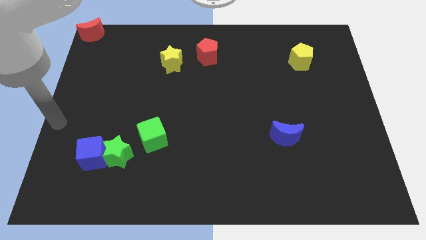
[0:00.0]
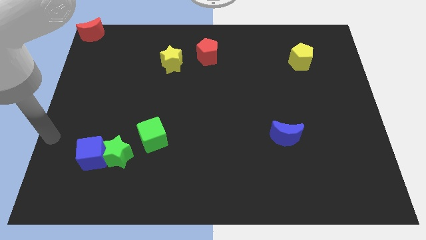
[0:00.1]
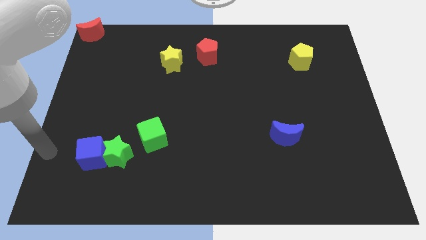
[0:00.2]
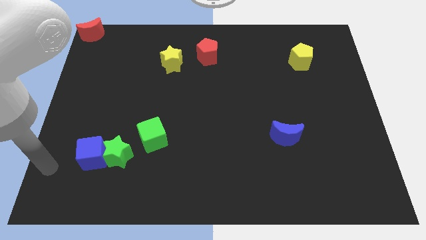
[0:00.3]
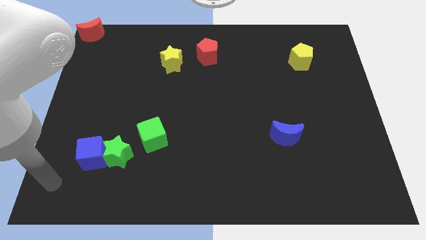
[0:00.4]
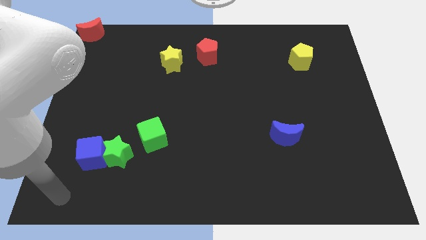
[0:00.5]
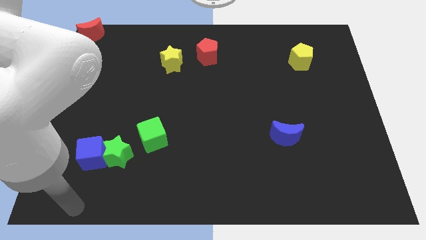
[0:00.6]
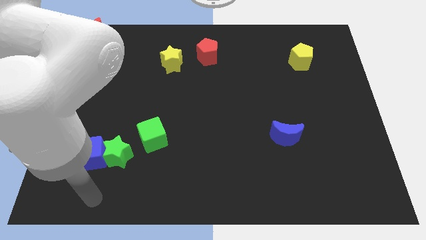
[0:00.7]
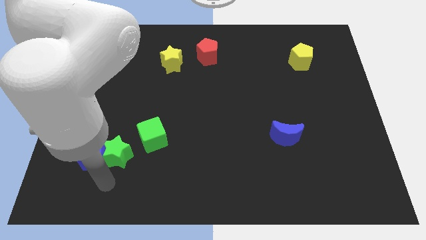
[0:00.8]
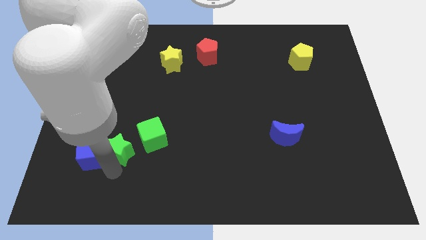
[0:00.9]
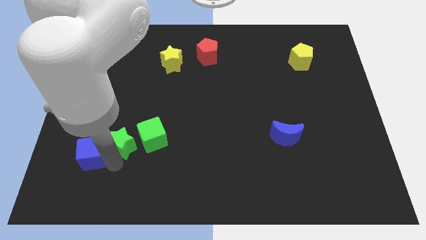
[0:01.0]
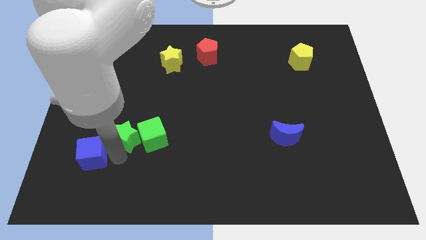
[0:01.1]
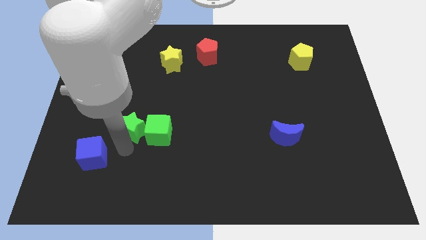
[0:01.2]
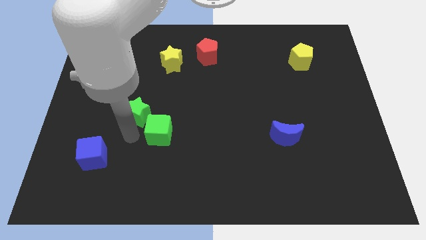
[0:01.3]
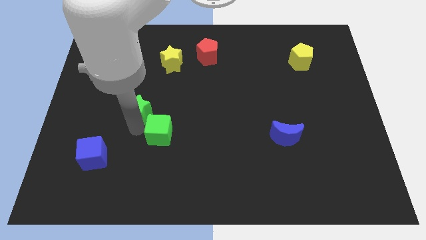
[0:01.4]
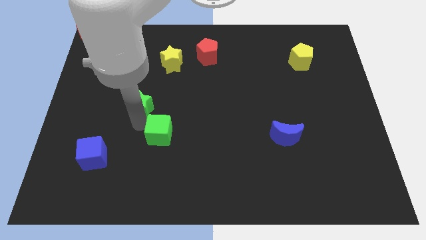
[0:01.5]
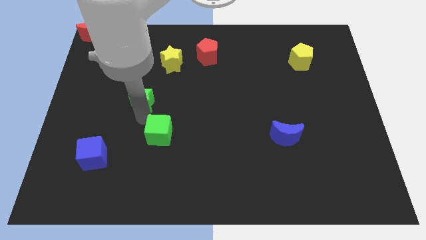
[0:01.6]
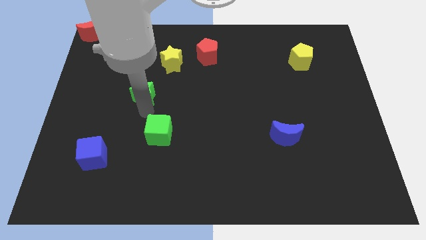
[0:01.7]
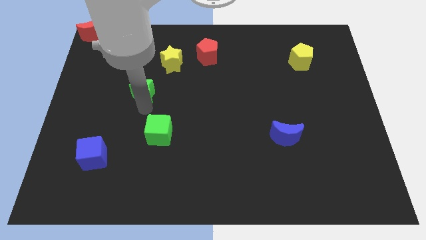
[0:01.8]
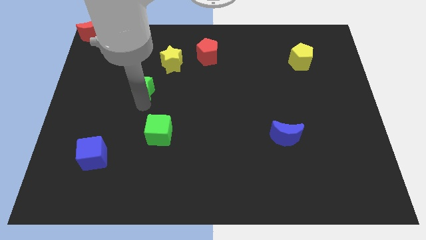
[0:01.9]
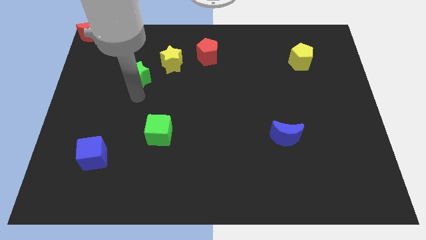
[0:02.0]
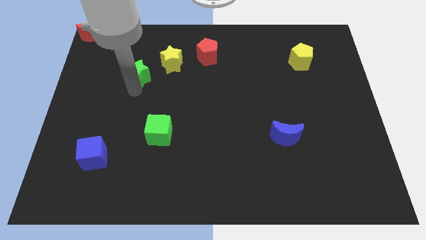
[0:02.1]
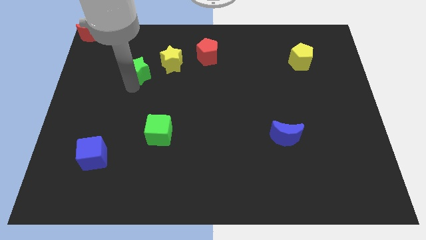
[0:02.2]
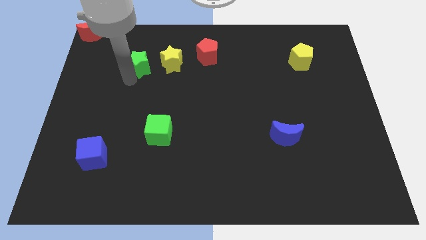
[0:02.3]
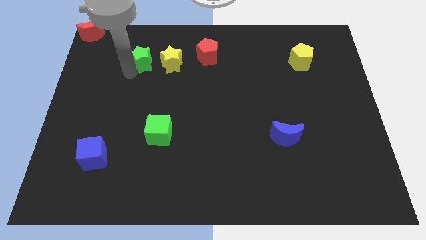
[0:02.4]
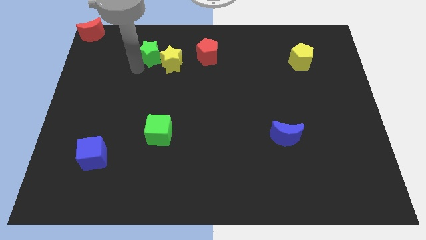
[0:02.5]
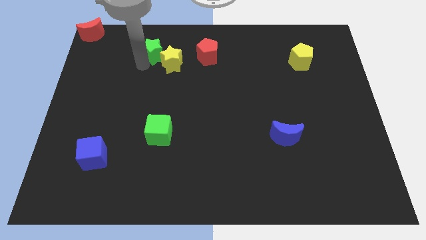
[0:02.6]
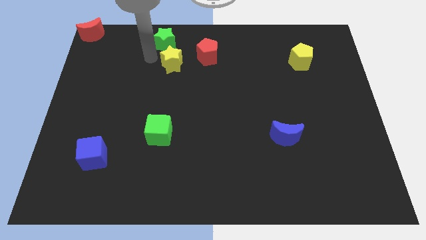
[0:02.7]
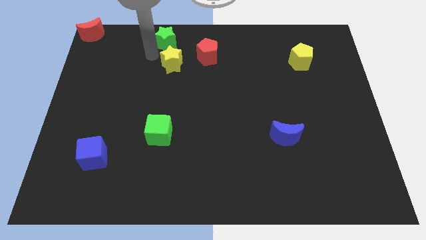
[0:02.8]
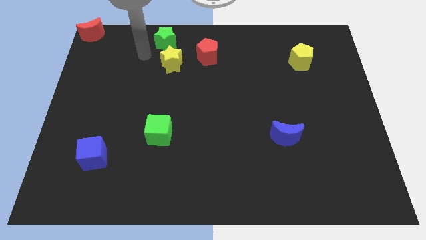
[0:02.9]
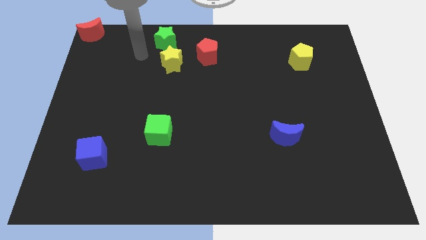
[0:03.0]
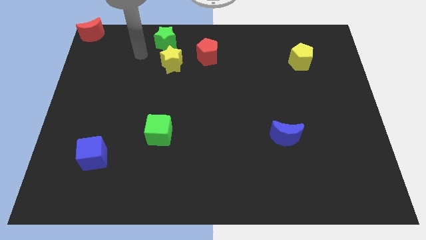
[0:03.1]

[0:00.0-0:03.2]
move the green star towards the top center of the board

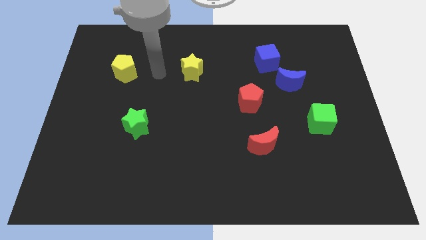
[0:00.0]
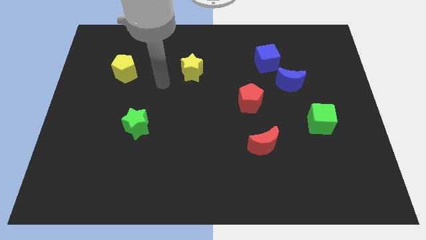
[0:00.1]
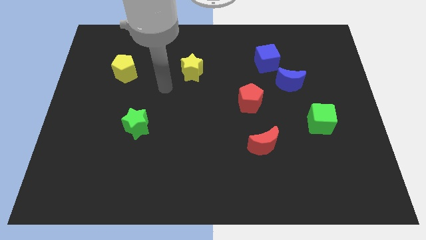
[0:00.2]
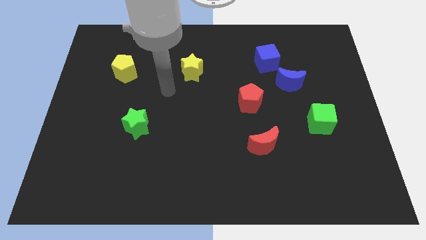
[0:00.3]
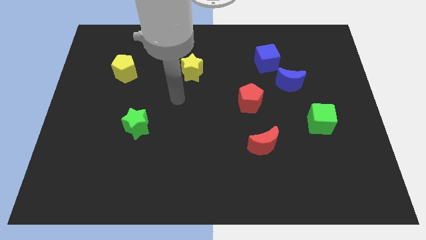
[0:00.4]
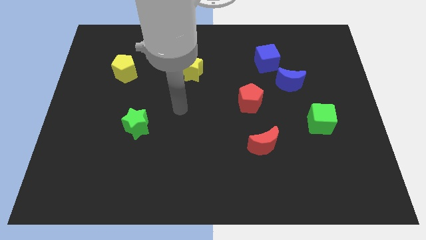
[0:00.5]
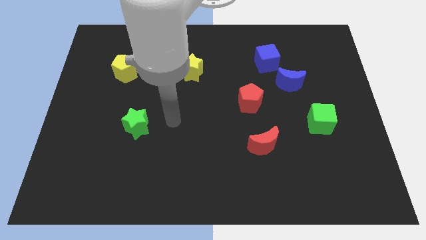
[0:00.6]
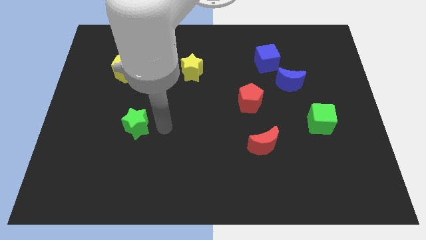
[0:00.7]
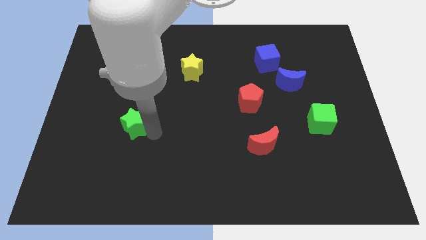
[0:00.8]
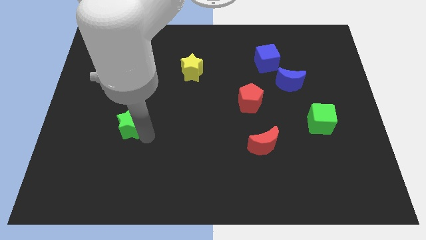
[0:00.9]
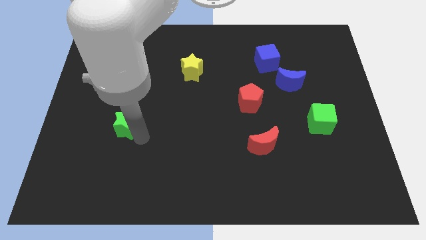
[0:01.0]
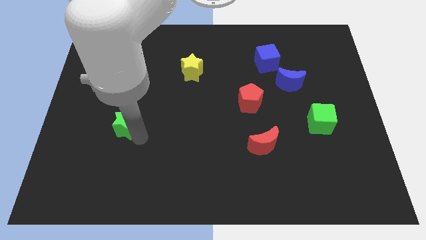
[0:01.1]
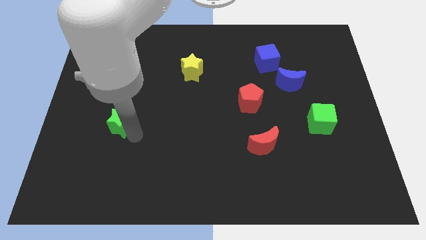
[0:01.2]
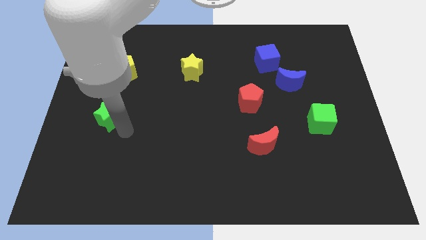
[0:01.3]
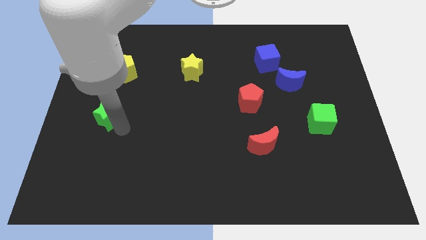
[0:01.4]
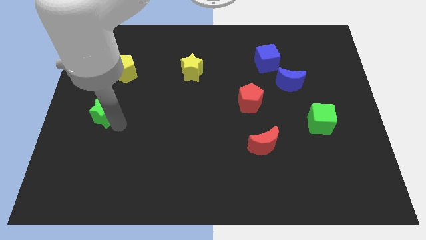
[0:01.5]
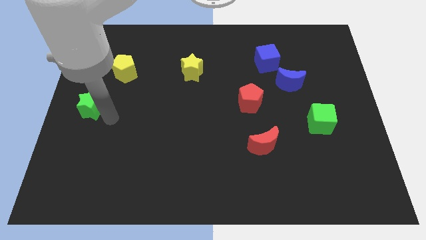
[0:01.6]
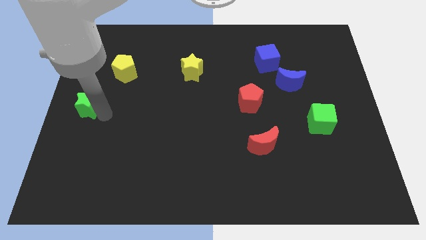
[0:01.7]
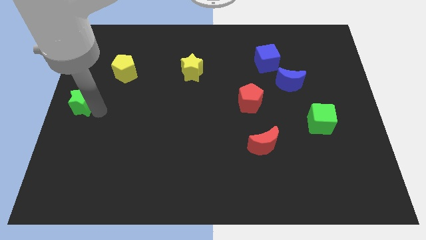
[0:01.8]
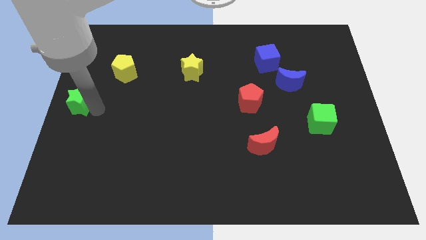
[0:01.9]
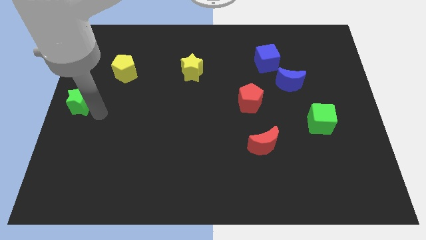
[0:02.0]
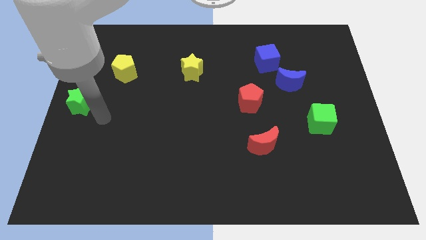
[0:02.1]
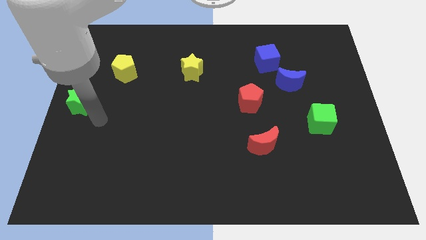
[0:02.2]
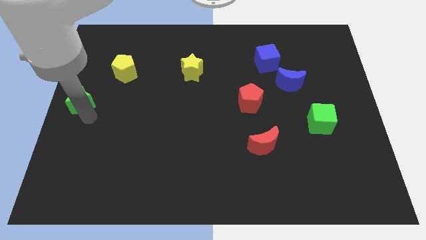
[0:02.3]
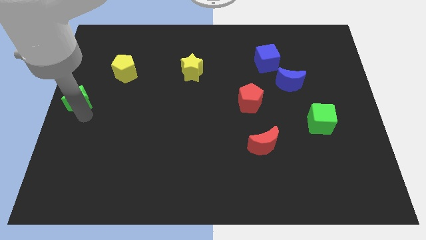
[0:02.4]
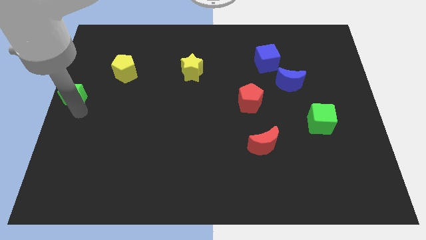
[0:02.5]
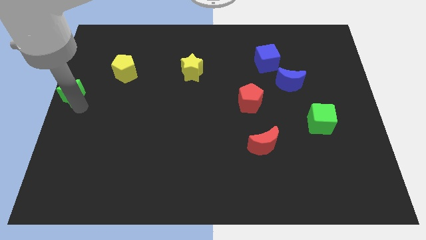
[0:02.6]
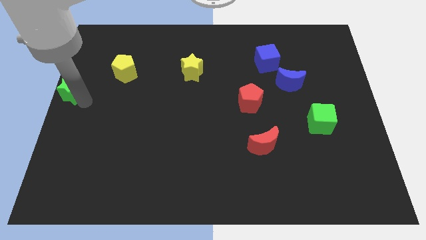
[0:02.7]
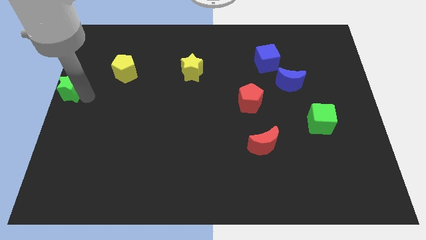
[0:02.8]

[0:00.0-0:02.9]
move the green star to left of the board

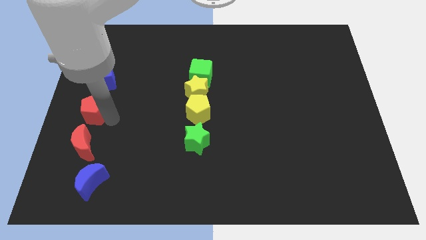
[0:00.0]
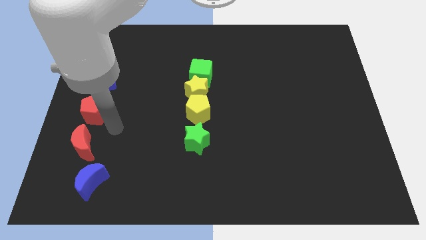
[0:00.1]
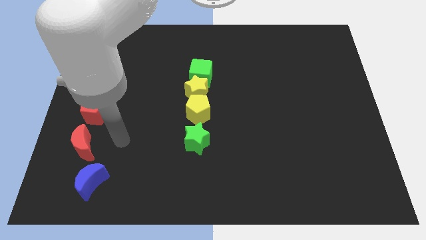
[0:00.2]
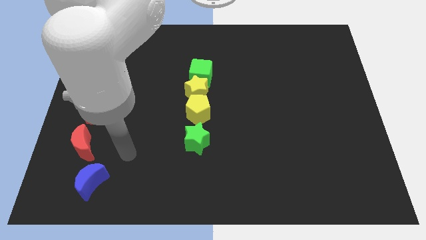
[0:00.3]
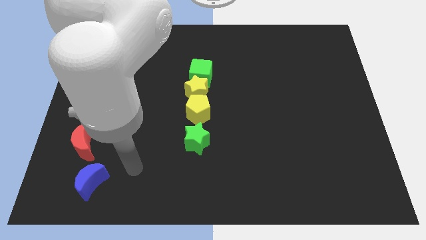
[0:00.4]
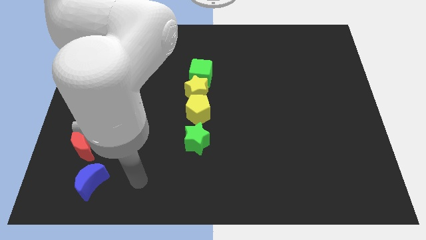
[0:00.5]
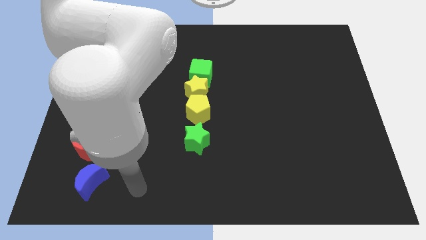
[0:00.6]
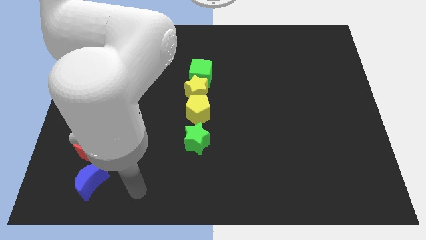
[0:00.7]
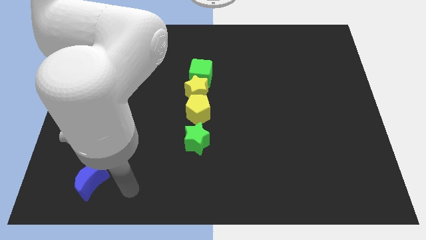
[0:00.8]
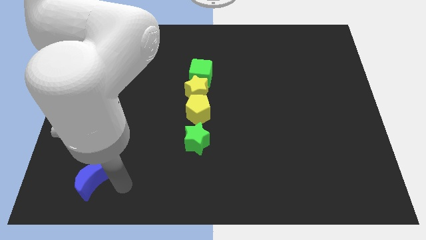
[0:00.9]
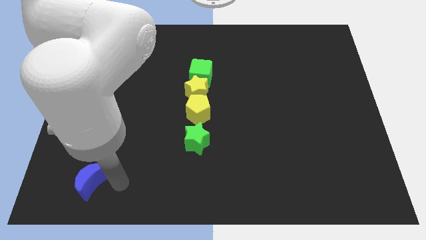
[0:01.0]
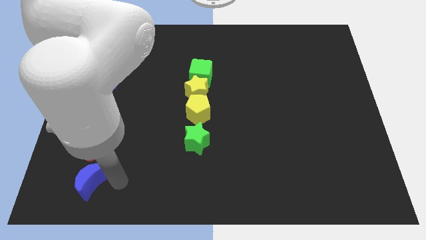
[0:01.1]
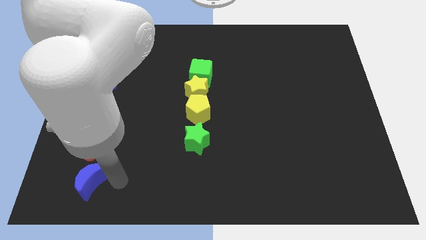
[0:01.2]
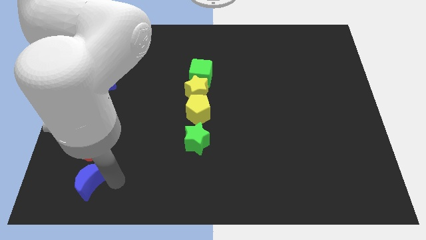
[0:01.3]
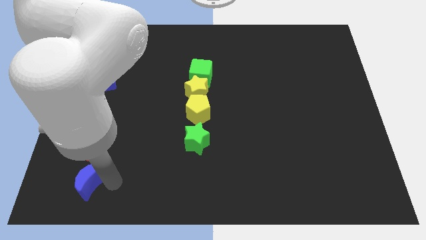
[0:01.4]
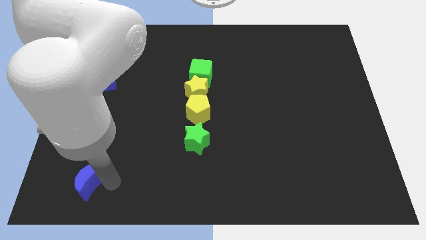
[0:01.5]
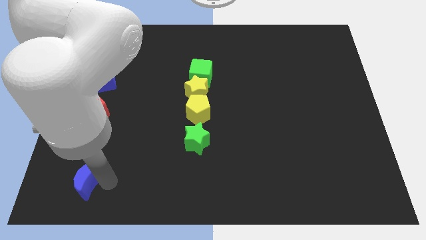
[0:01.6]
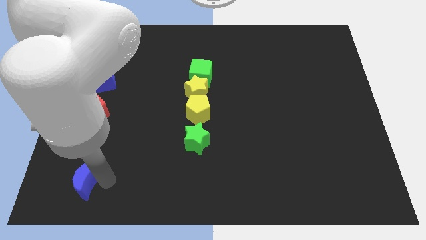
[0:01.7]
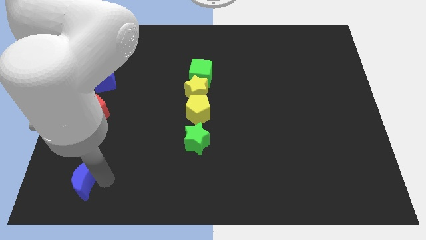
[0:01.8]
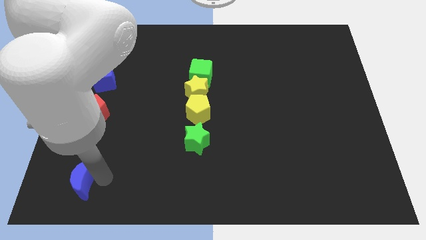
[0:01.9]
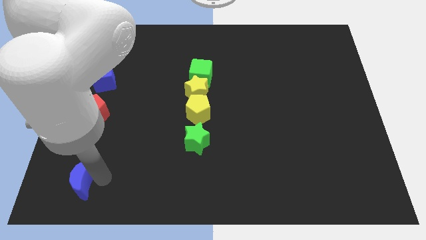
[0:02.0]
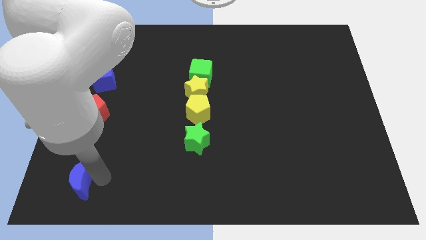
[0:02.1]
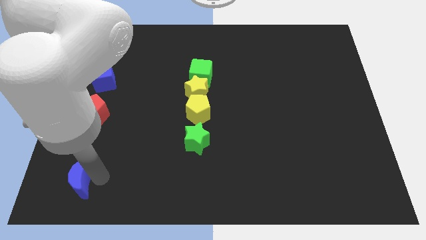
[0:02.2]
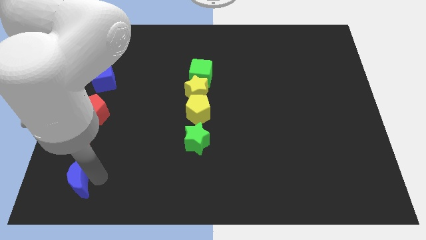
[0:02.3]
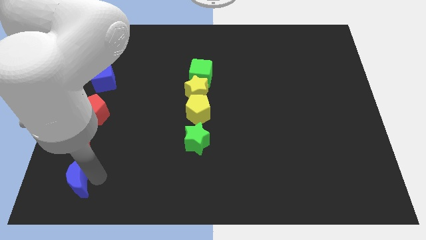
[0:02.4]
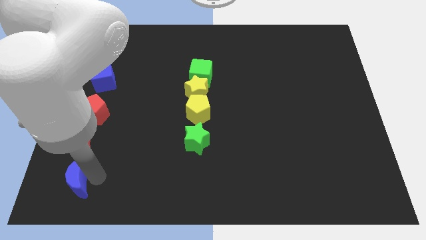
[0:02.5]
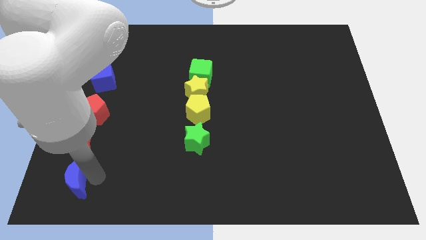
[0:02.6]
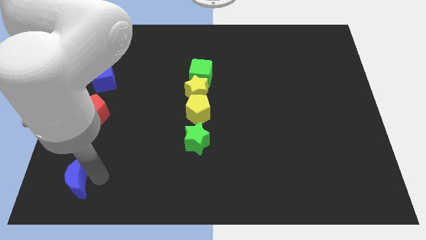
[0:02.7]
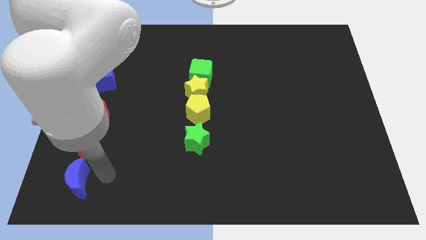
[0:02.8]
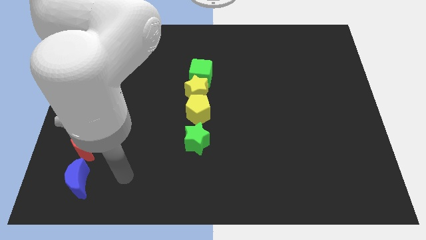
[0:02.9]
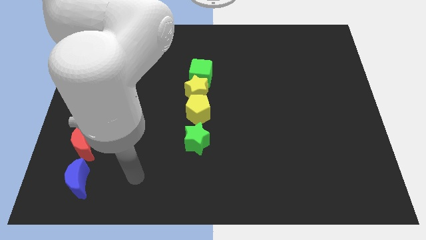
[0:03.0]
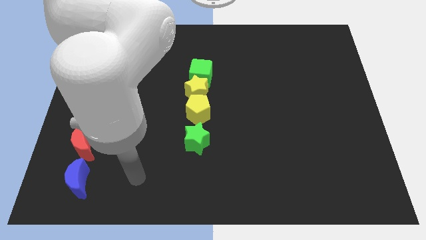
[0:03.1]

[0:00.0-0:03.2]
slightly move the blue moon to the bottom of the red moon
